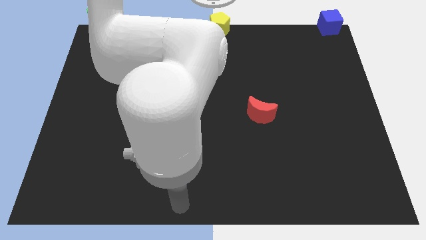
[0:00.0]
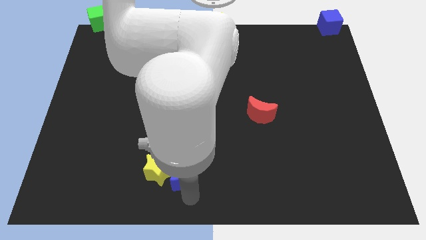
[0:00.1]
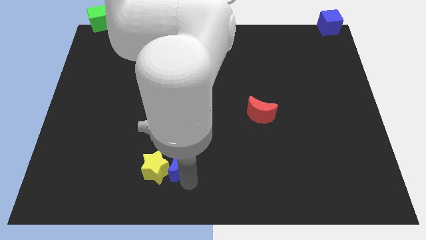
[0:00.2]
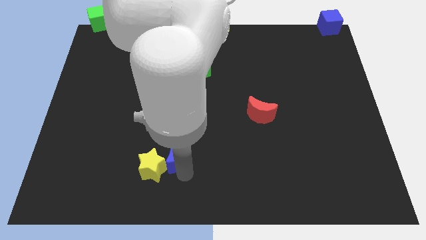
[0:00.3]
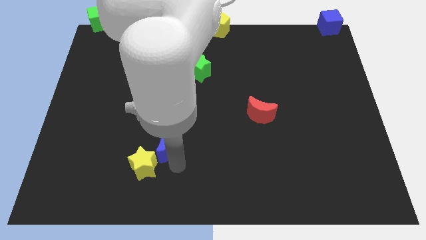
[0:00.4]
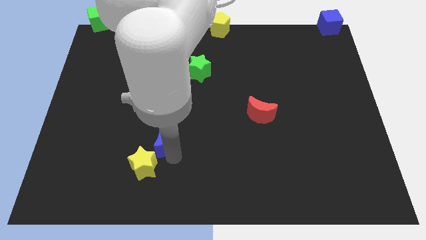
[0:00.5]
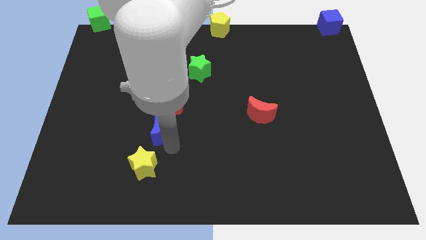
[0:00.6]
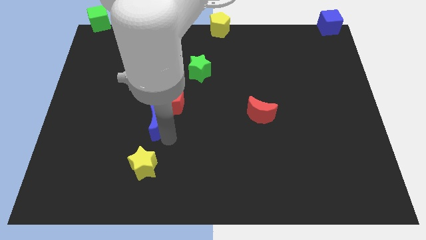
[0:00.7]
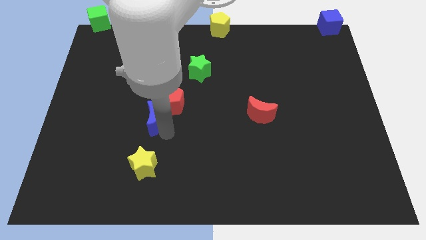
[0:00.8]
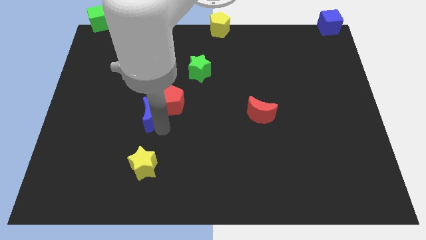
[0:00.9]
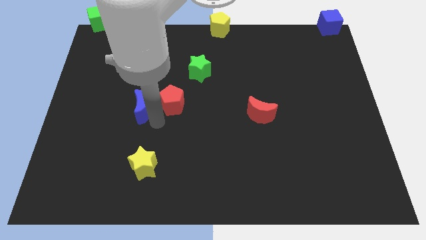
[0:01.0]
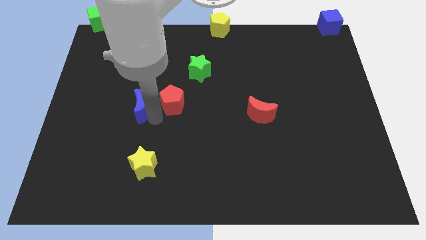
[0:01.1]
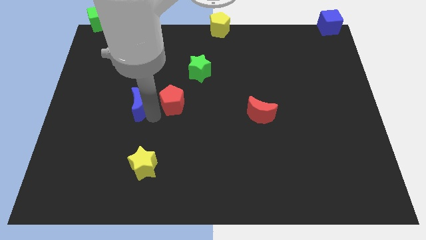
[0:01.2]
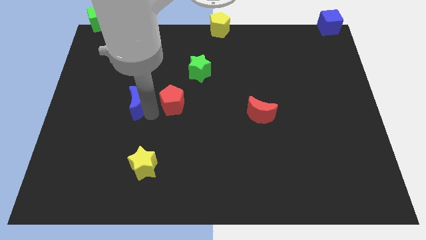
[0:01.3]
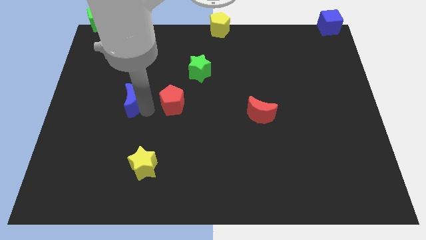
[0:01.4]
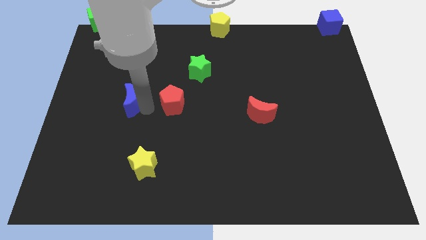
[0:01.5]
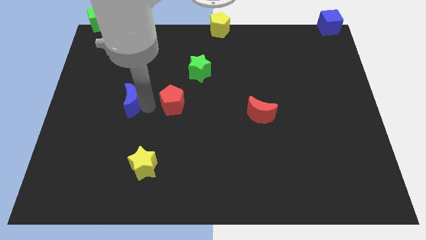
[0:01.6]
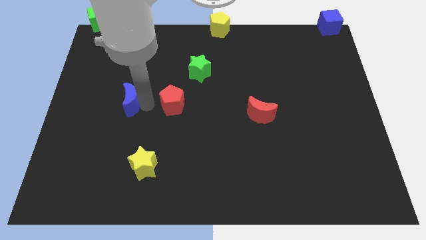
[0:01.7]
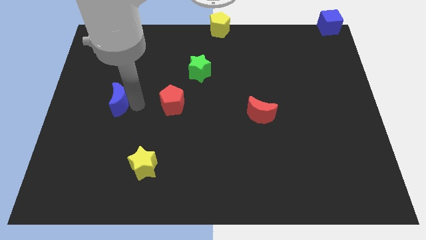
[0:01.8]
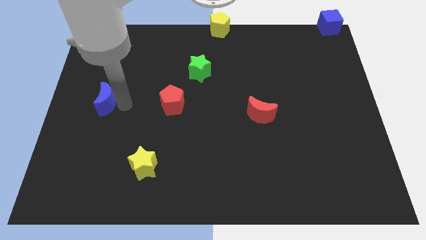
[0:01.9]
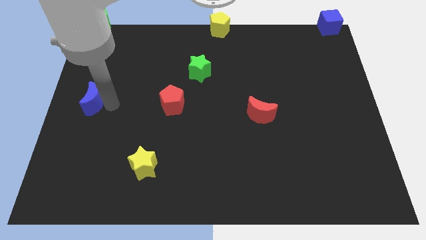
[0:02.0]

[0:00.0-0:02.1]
push the blue crescent in front of the center left of the board

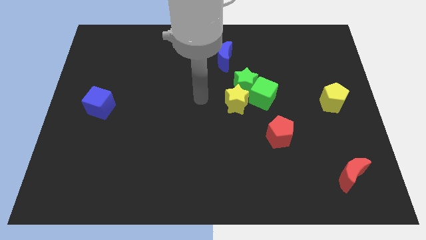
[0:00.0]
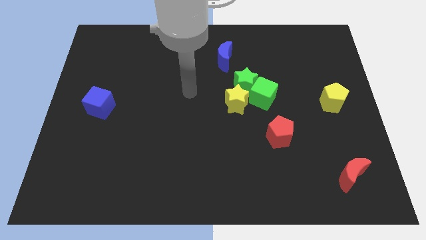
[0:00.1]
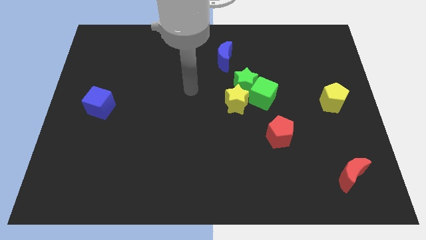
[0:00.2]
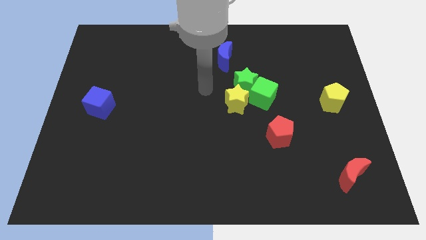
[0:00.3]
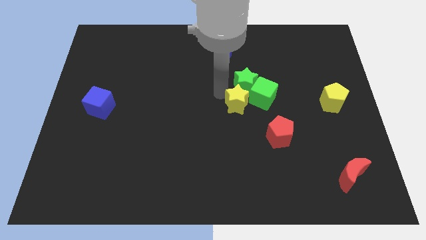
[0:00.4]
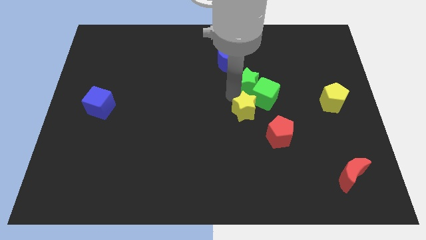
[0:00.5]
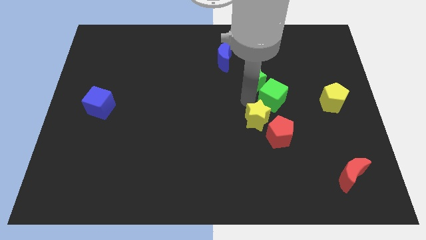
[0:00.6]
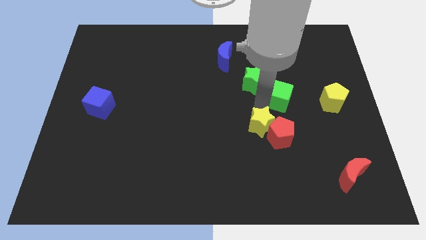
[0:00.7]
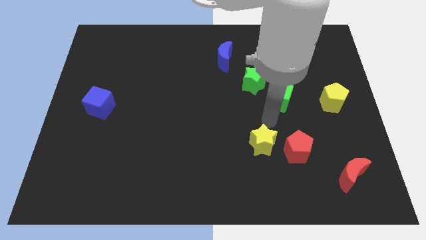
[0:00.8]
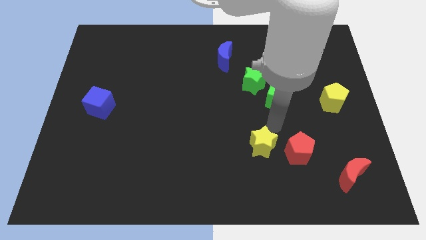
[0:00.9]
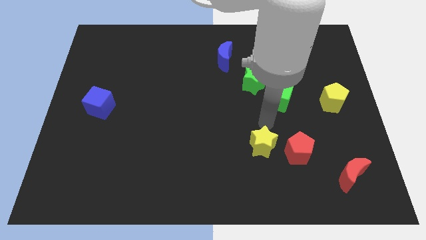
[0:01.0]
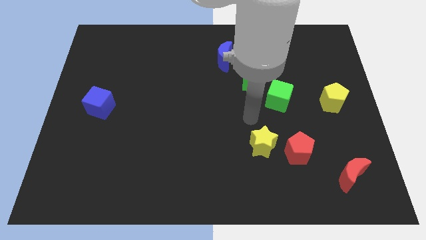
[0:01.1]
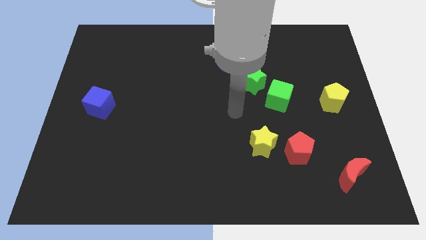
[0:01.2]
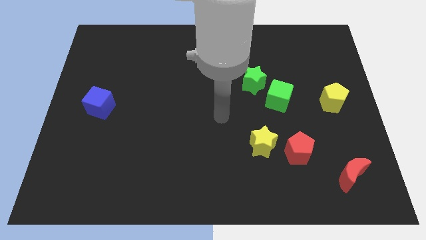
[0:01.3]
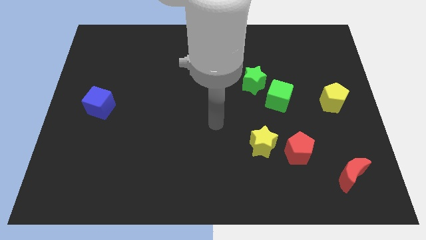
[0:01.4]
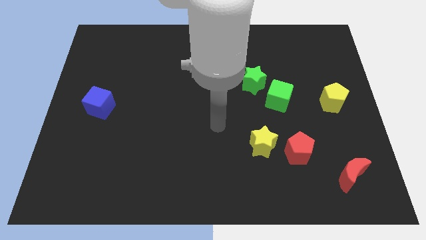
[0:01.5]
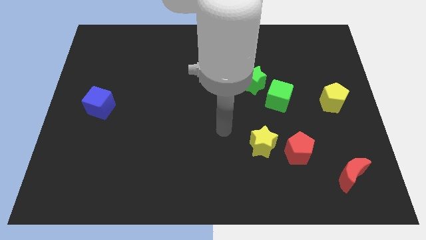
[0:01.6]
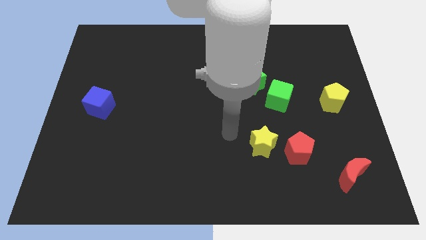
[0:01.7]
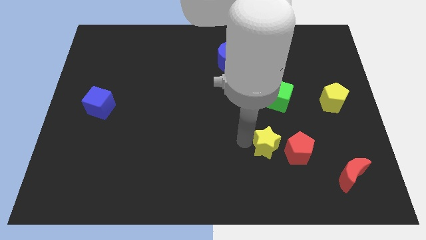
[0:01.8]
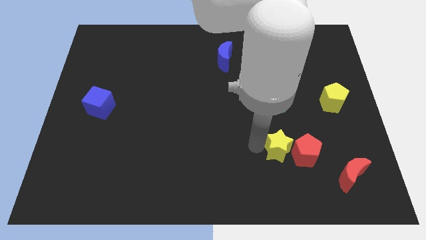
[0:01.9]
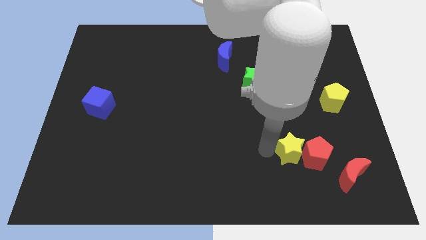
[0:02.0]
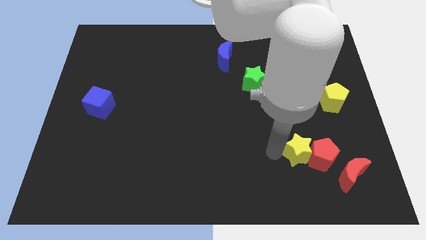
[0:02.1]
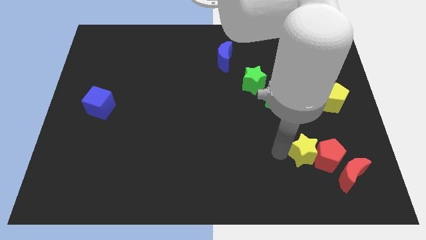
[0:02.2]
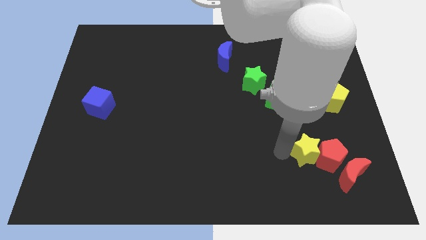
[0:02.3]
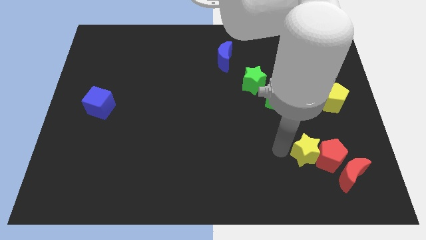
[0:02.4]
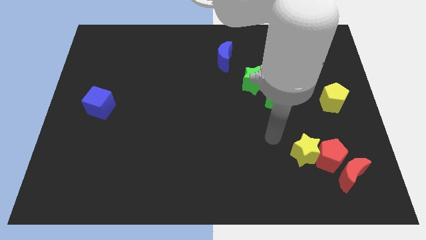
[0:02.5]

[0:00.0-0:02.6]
move the yellow star to the left of the red pentagon

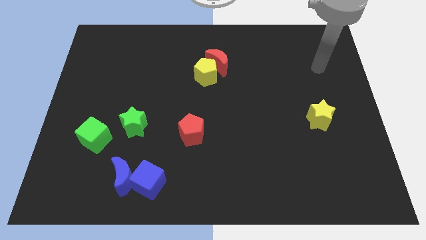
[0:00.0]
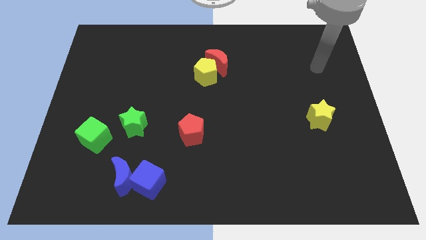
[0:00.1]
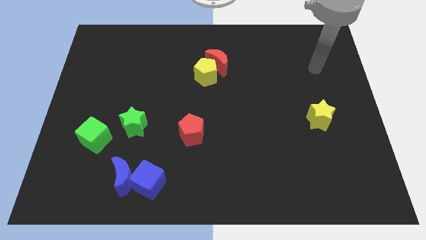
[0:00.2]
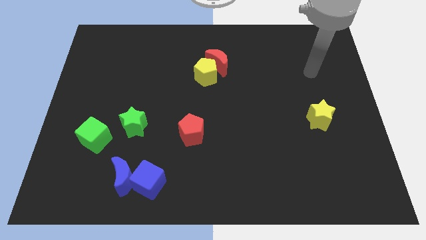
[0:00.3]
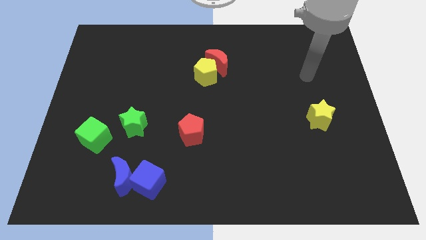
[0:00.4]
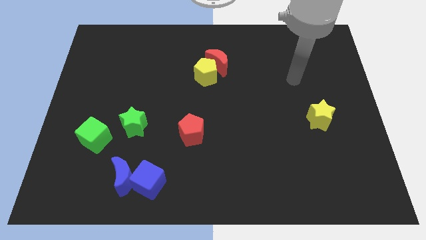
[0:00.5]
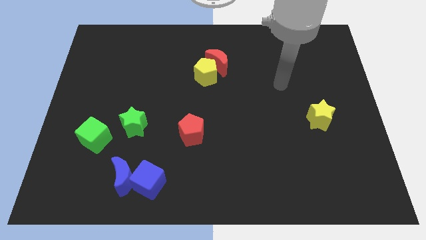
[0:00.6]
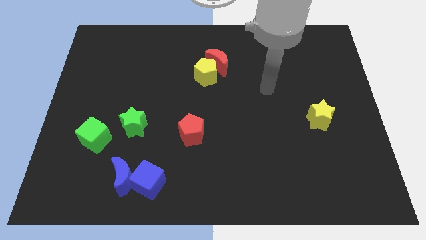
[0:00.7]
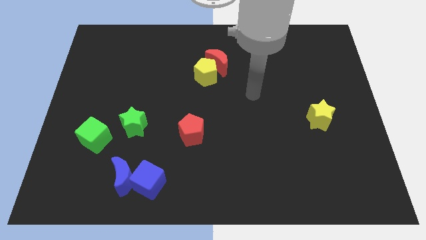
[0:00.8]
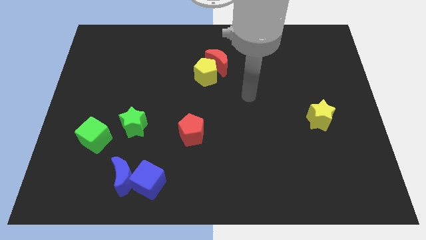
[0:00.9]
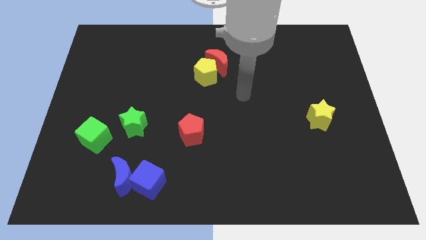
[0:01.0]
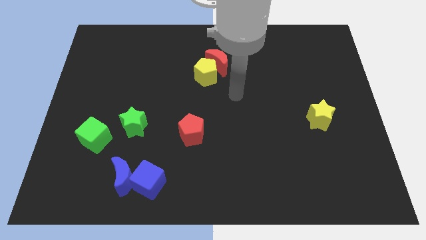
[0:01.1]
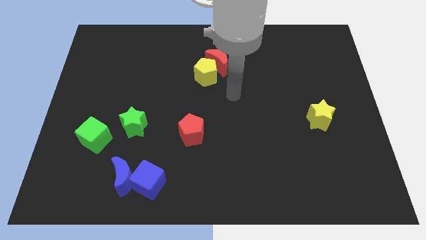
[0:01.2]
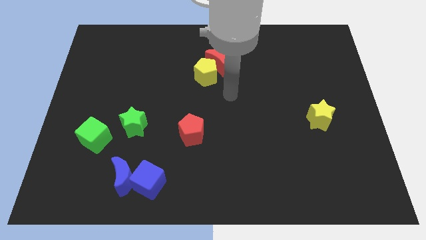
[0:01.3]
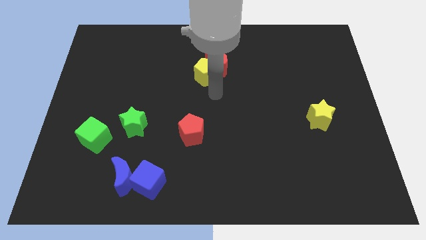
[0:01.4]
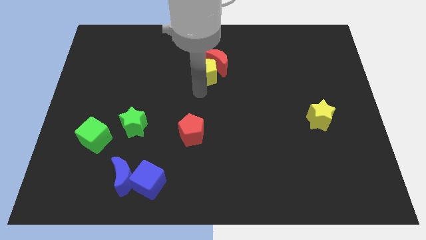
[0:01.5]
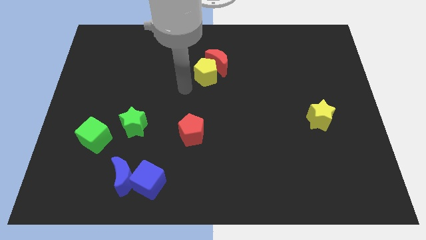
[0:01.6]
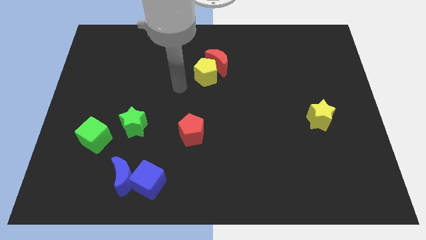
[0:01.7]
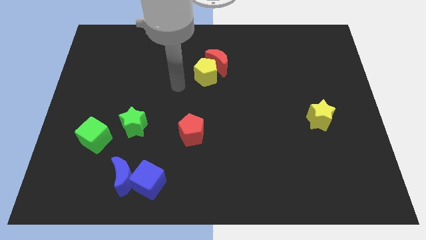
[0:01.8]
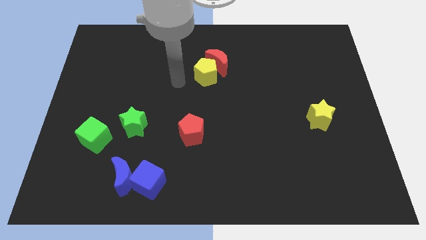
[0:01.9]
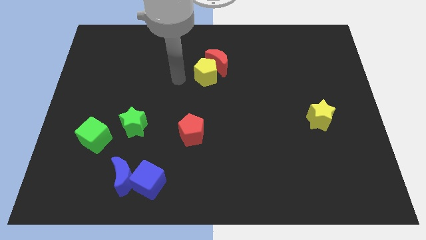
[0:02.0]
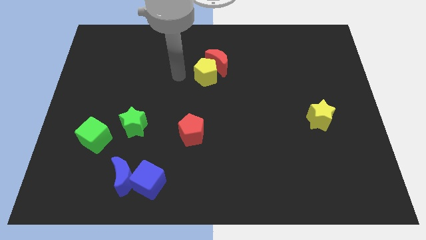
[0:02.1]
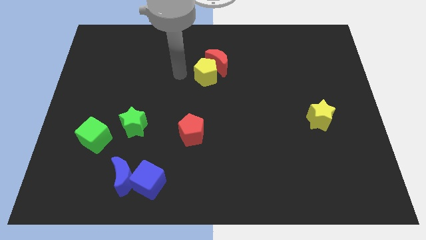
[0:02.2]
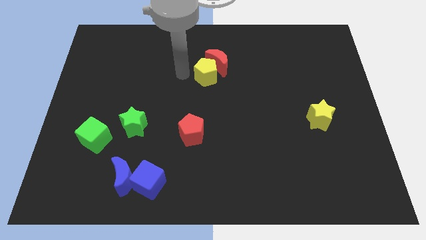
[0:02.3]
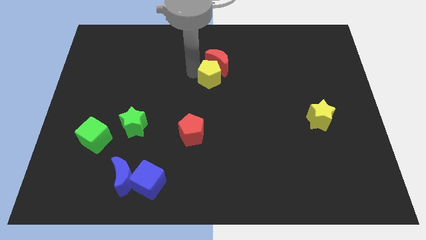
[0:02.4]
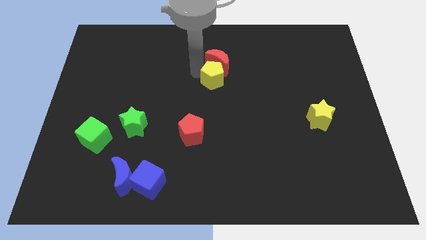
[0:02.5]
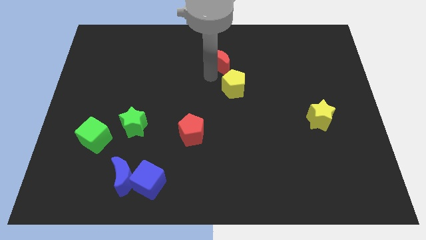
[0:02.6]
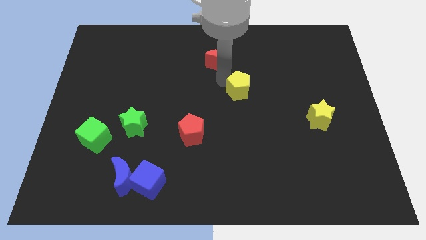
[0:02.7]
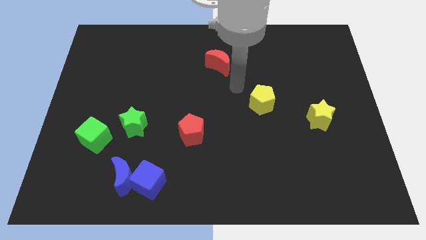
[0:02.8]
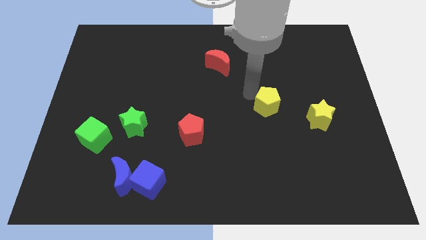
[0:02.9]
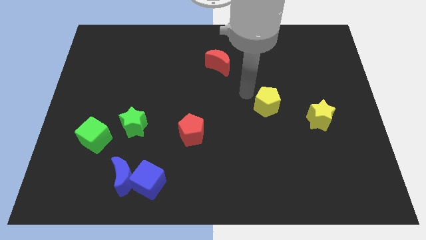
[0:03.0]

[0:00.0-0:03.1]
separate the yellow pentagon from the red crescent

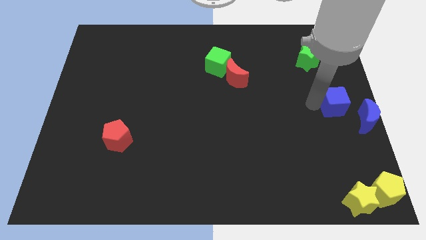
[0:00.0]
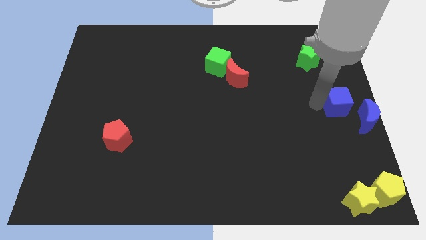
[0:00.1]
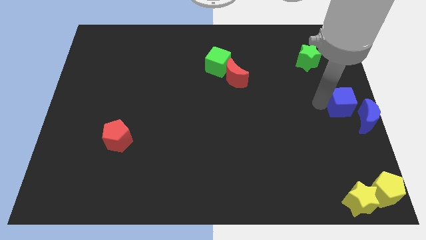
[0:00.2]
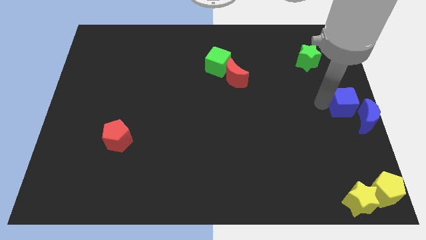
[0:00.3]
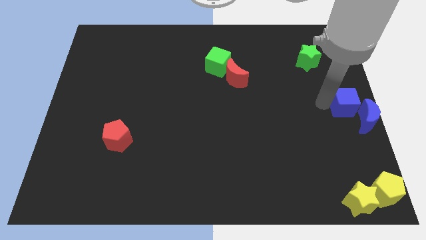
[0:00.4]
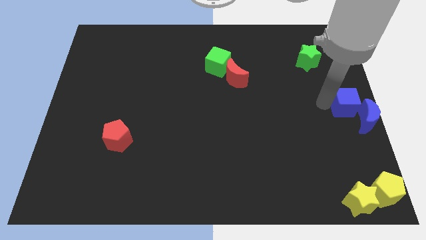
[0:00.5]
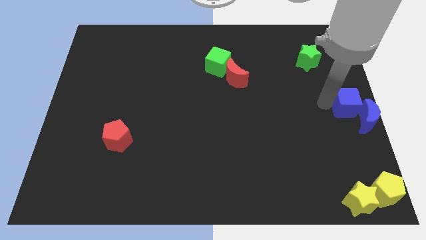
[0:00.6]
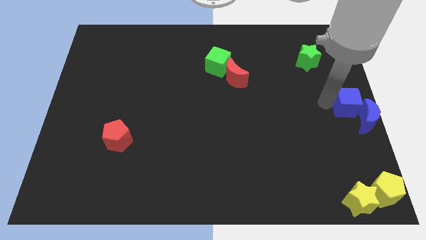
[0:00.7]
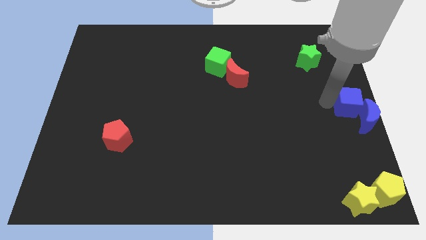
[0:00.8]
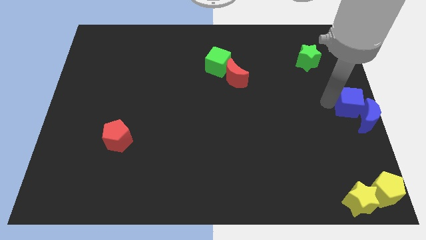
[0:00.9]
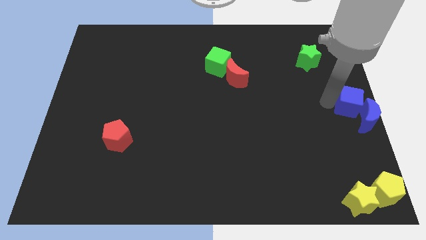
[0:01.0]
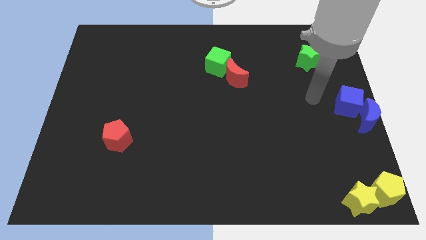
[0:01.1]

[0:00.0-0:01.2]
push the blue cube into the blue moon
